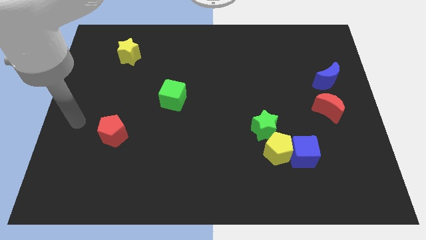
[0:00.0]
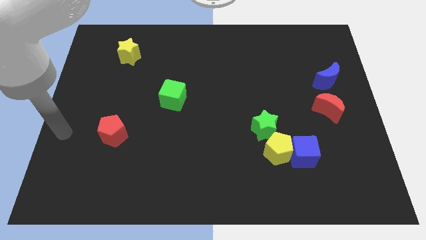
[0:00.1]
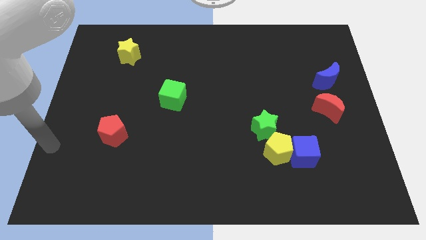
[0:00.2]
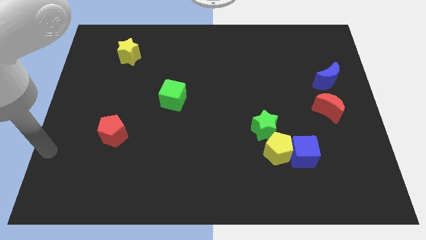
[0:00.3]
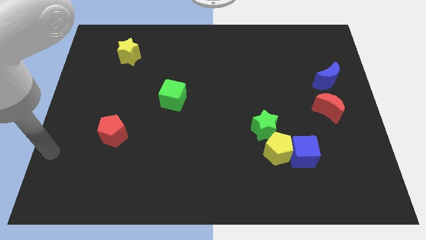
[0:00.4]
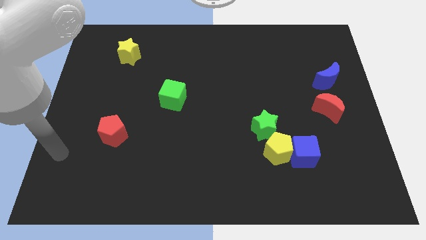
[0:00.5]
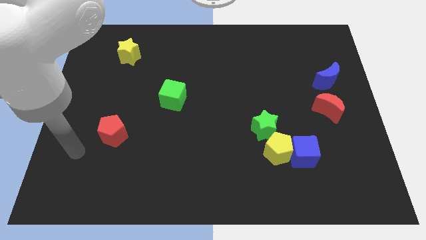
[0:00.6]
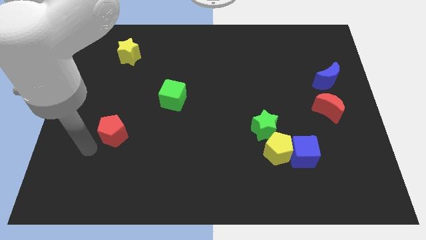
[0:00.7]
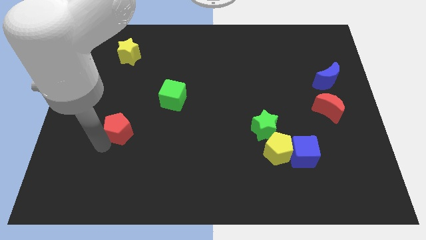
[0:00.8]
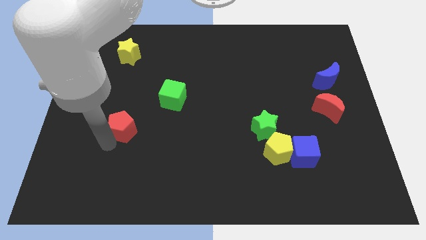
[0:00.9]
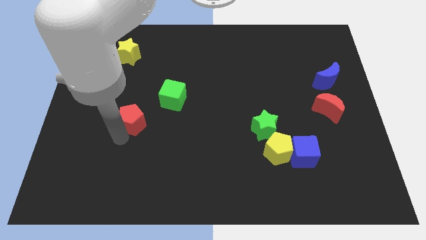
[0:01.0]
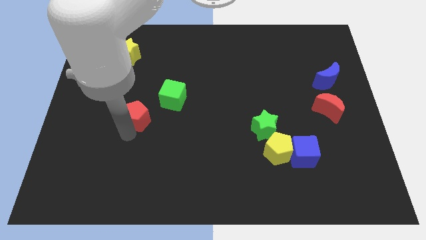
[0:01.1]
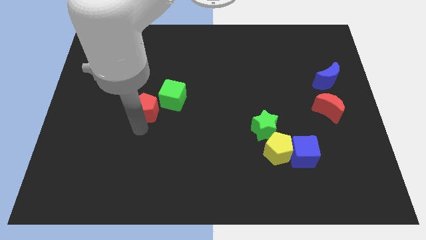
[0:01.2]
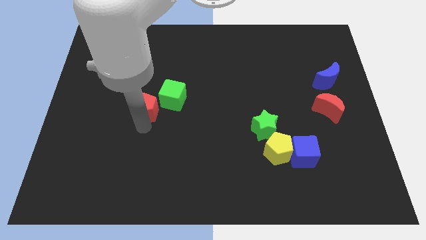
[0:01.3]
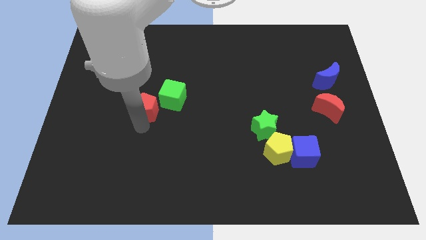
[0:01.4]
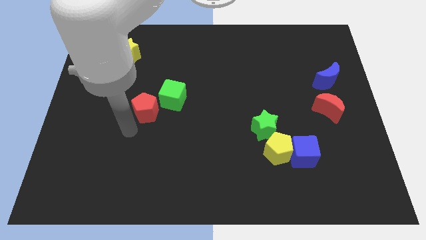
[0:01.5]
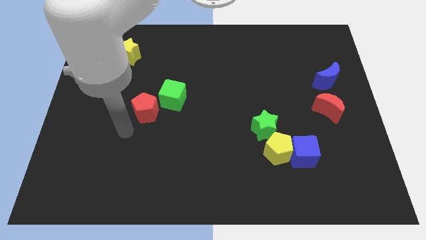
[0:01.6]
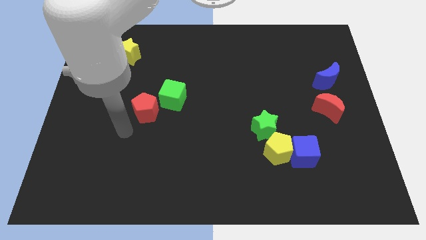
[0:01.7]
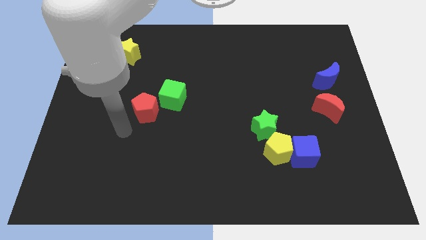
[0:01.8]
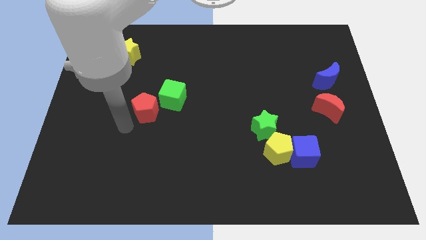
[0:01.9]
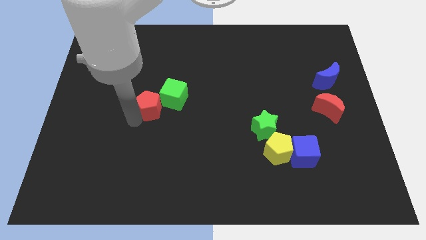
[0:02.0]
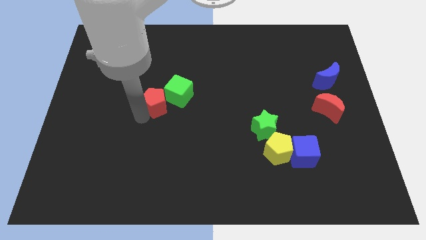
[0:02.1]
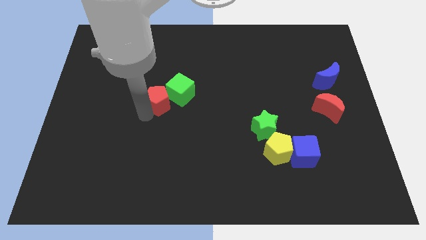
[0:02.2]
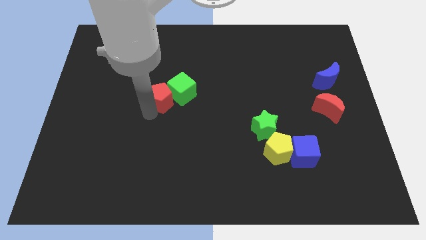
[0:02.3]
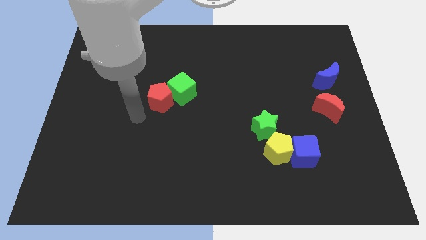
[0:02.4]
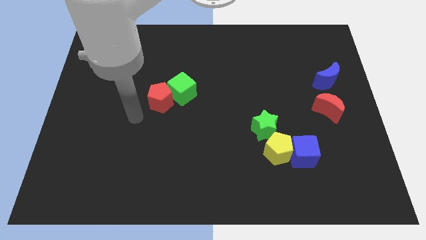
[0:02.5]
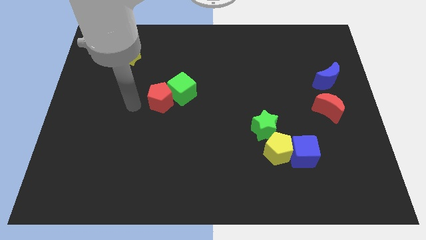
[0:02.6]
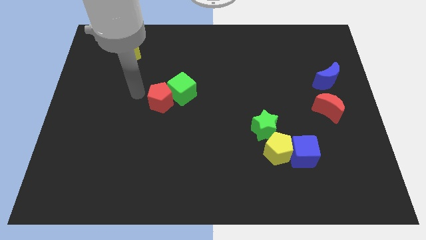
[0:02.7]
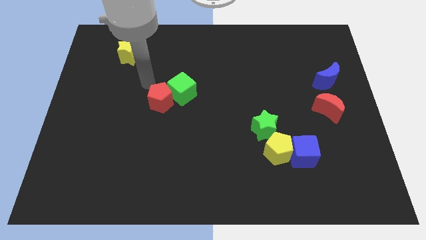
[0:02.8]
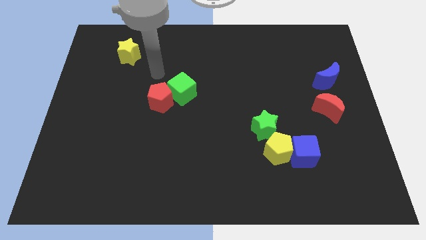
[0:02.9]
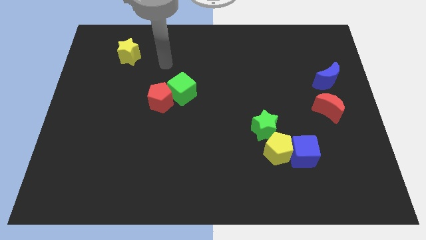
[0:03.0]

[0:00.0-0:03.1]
push the red crescent close to the green cube

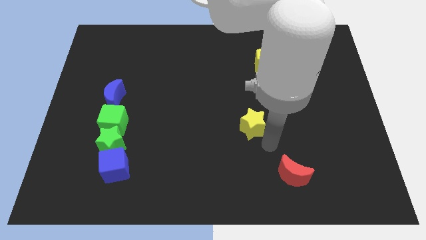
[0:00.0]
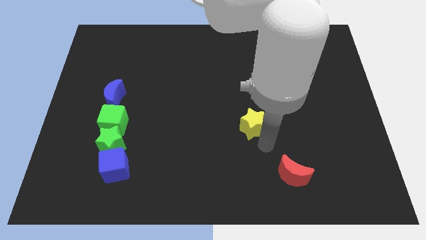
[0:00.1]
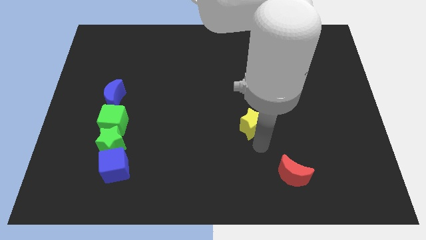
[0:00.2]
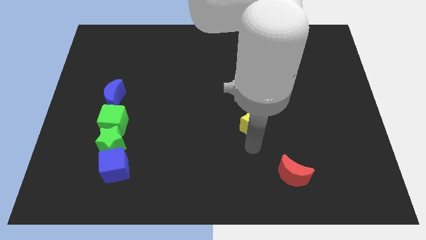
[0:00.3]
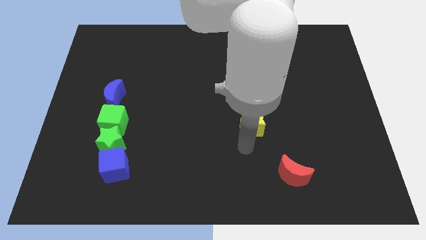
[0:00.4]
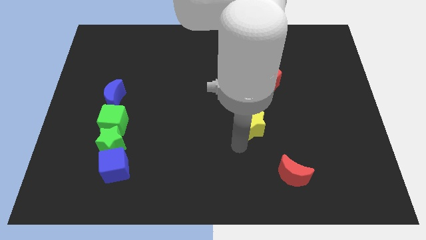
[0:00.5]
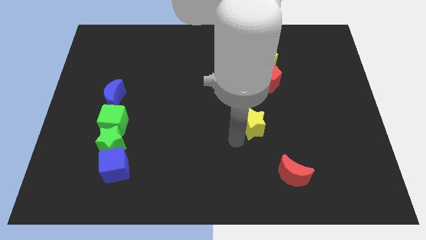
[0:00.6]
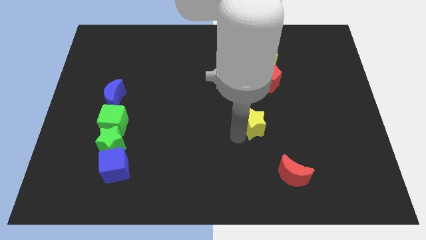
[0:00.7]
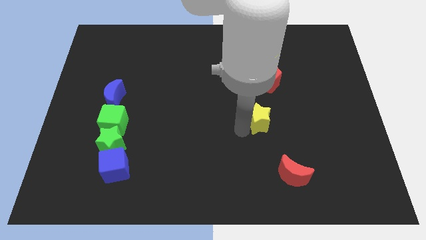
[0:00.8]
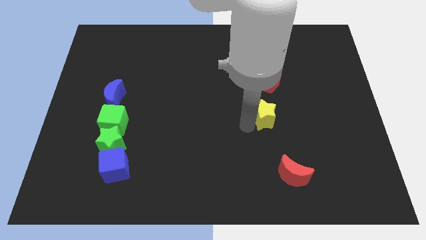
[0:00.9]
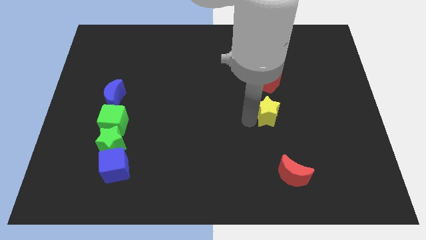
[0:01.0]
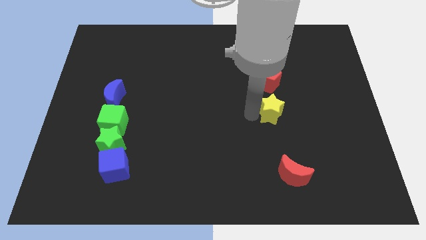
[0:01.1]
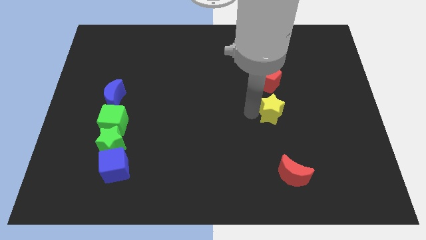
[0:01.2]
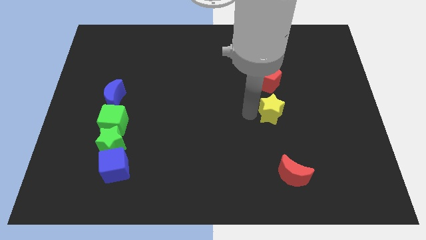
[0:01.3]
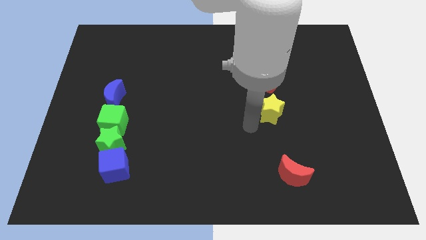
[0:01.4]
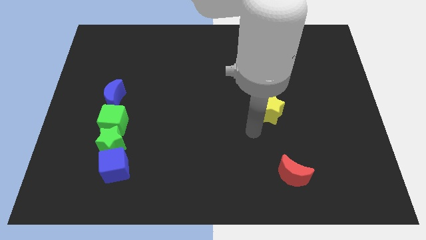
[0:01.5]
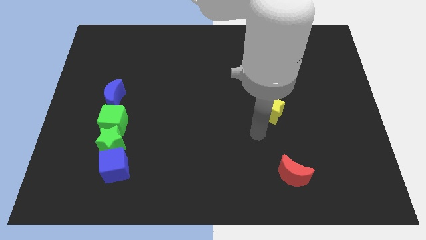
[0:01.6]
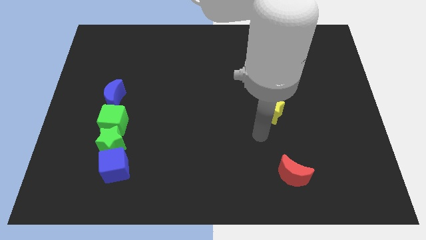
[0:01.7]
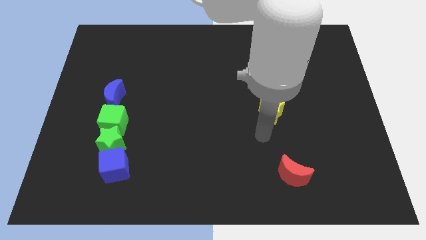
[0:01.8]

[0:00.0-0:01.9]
move the yellow star to the bottom of the red pentagon

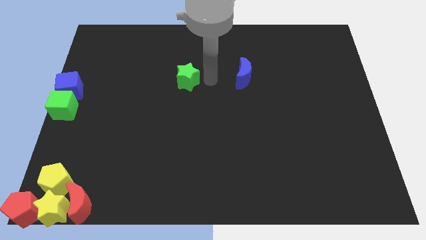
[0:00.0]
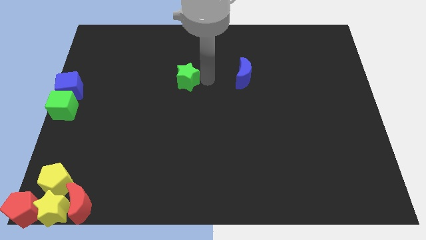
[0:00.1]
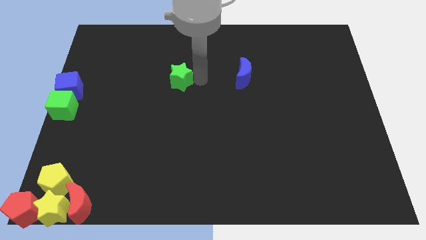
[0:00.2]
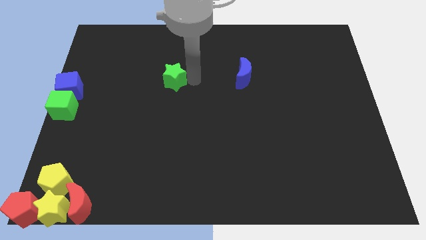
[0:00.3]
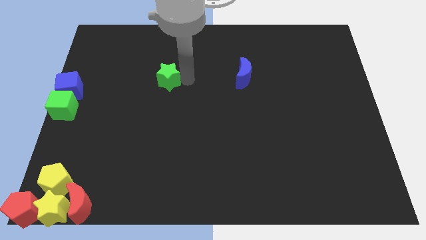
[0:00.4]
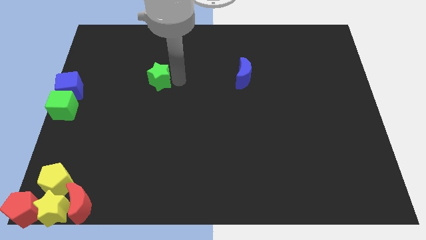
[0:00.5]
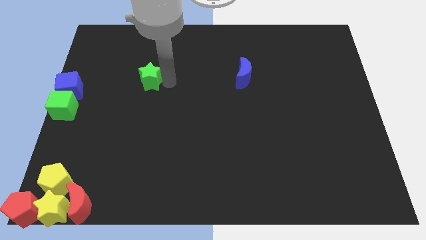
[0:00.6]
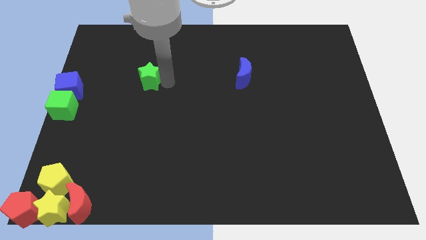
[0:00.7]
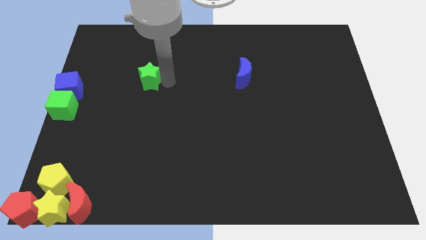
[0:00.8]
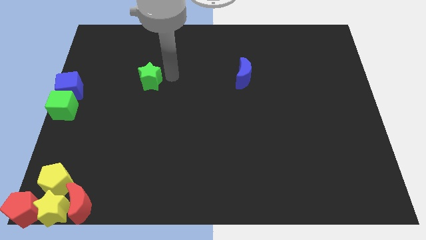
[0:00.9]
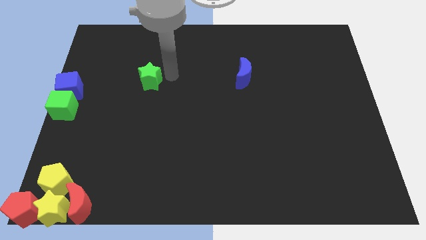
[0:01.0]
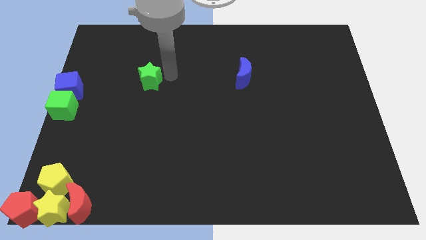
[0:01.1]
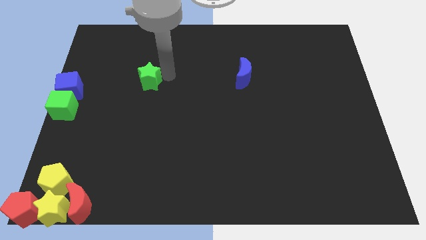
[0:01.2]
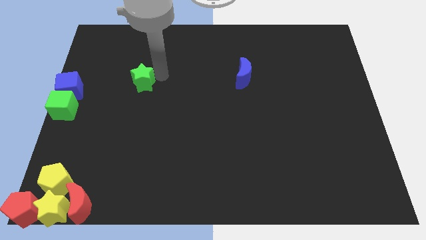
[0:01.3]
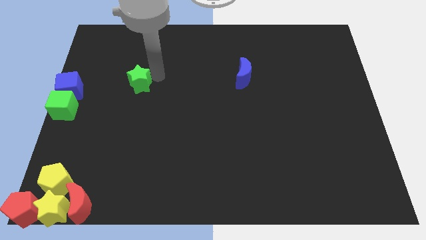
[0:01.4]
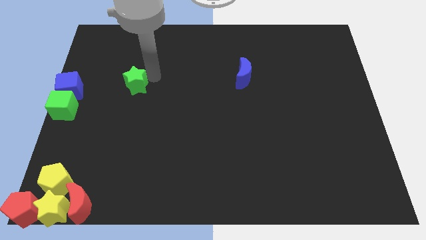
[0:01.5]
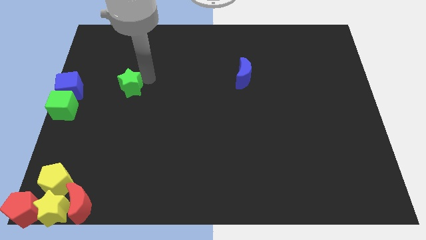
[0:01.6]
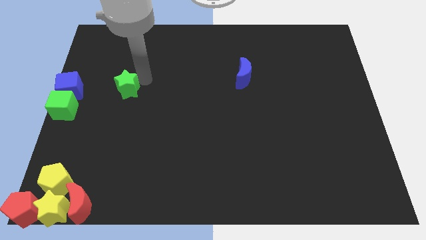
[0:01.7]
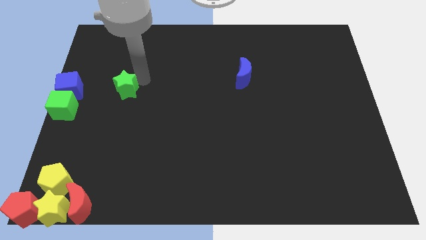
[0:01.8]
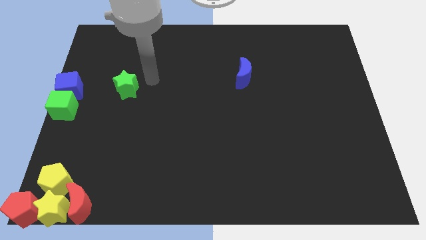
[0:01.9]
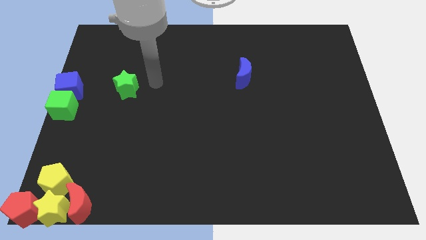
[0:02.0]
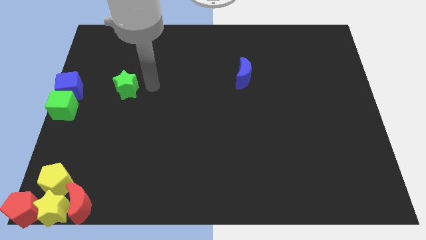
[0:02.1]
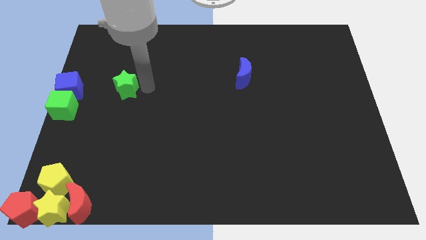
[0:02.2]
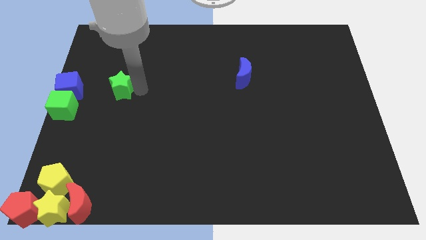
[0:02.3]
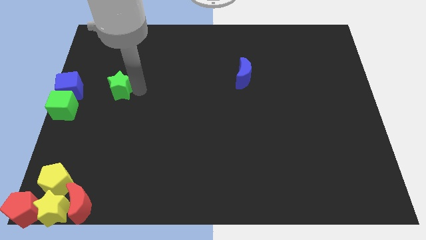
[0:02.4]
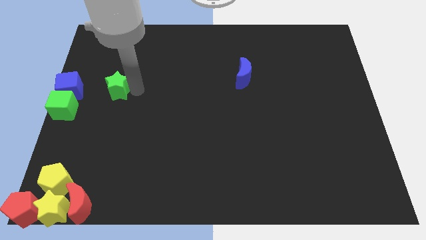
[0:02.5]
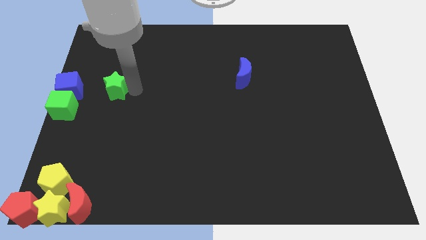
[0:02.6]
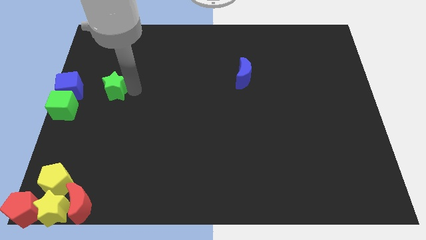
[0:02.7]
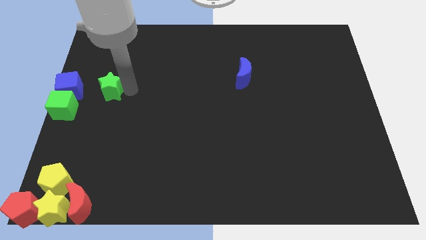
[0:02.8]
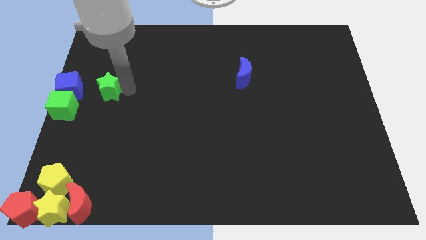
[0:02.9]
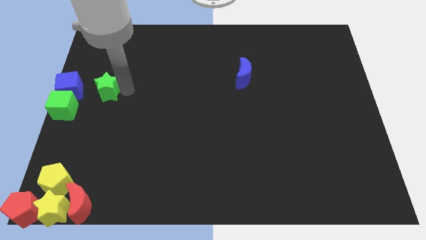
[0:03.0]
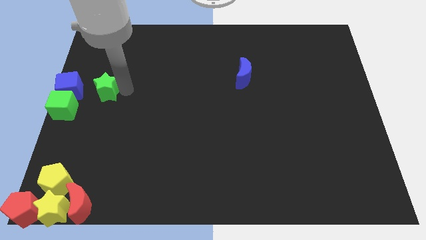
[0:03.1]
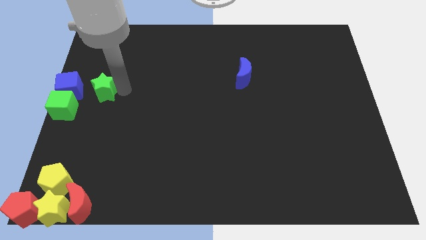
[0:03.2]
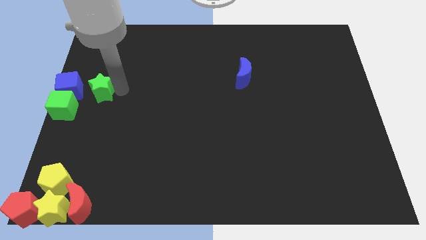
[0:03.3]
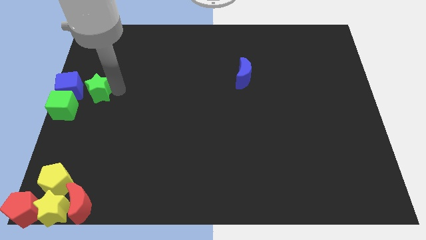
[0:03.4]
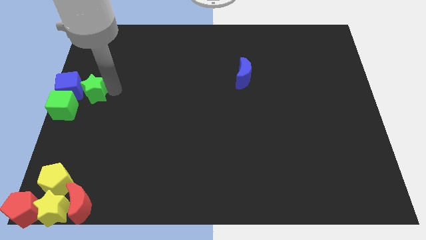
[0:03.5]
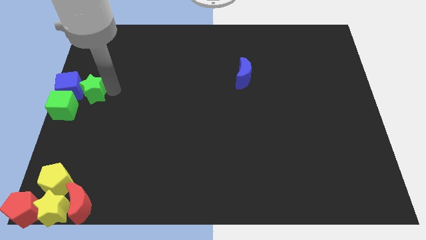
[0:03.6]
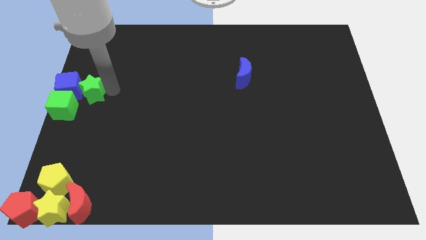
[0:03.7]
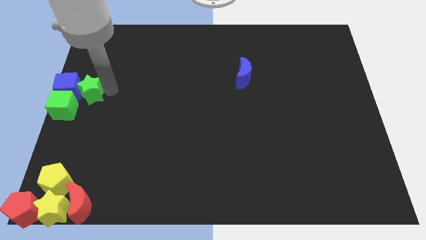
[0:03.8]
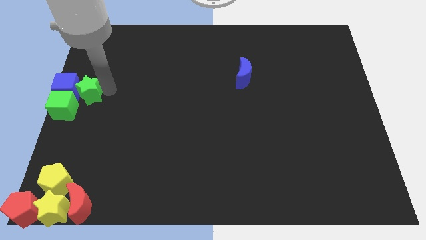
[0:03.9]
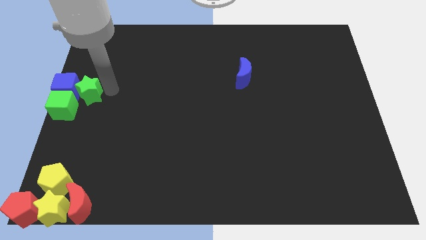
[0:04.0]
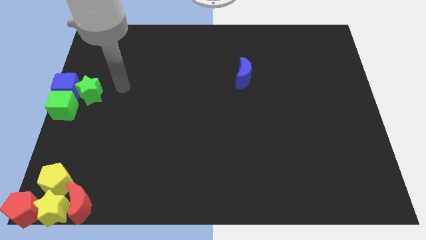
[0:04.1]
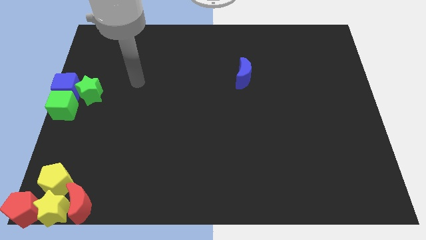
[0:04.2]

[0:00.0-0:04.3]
move the green star into the right side of the blue cube
